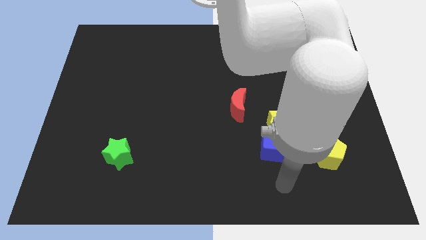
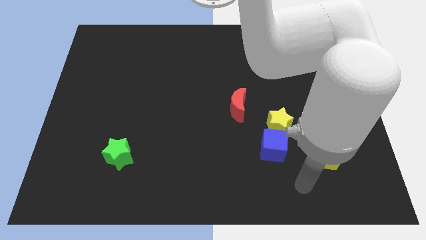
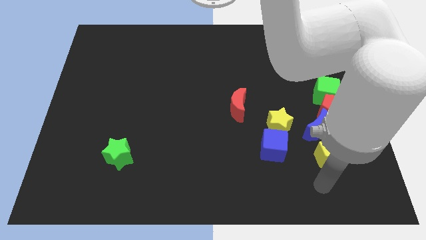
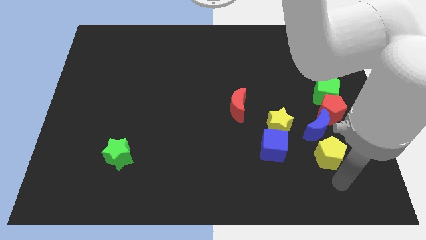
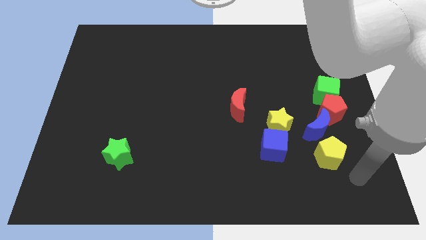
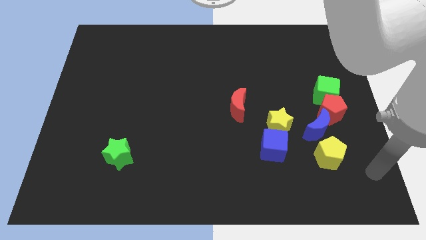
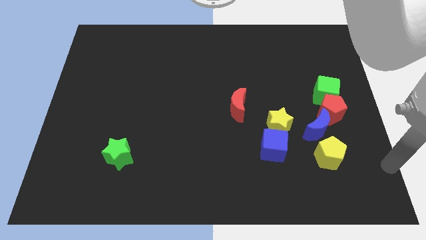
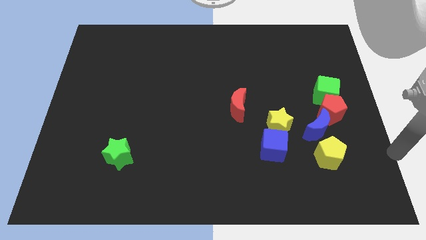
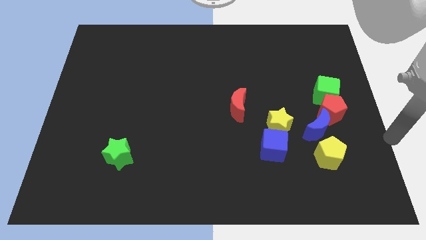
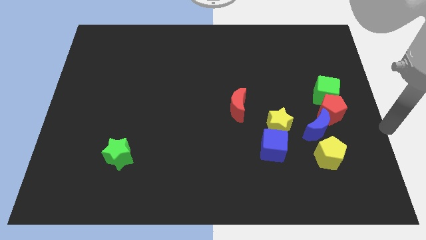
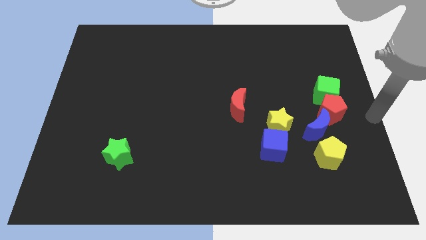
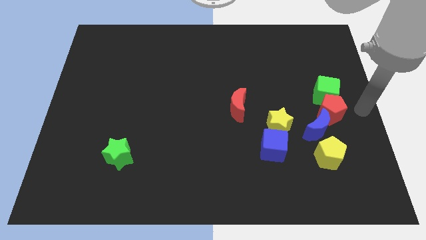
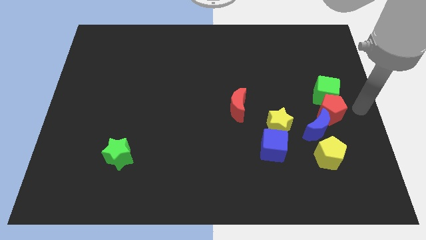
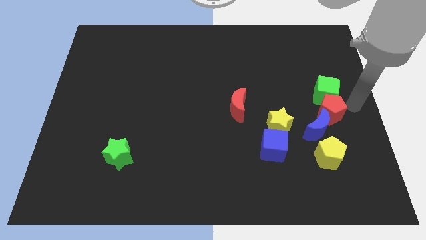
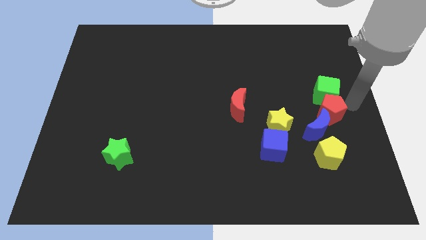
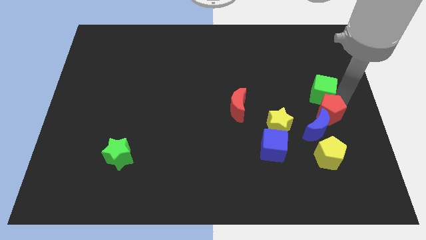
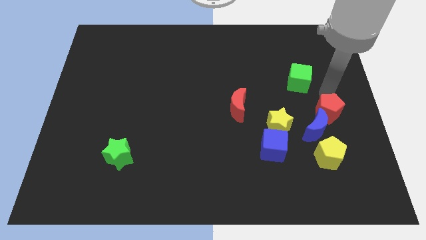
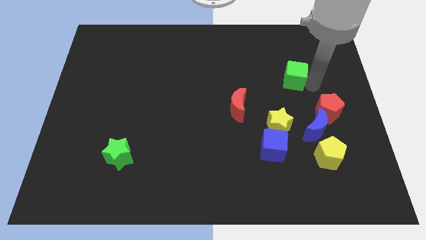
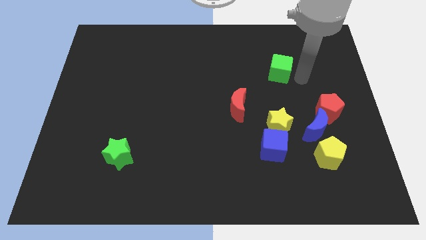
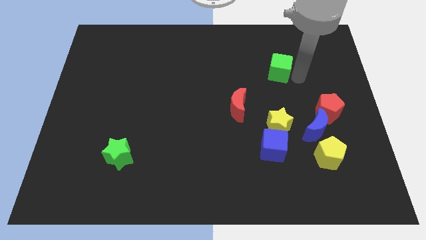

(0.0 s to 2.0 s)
separate the green cube from the red pentagon

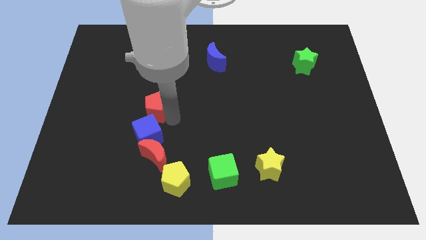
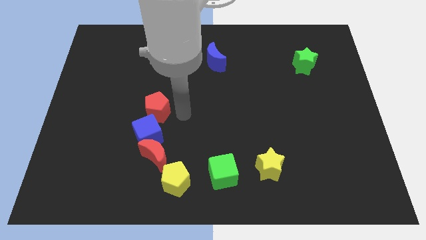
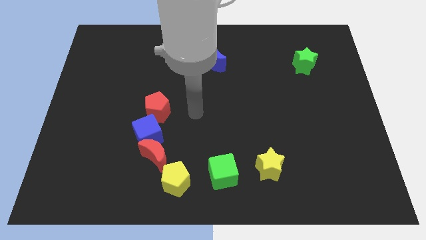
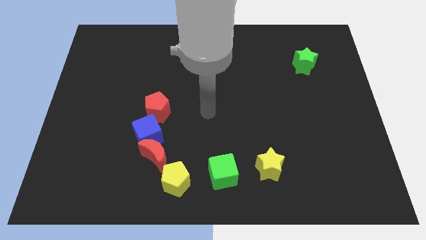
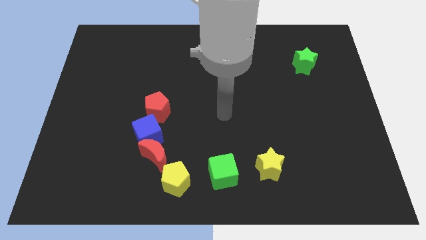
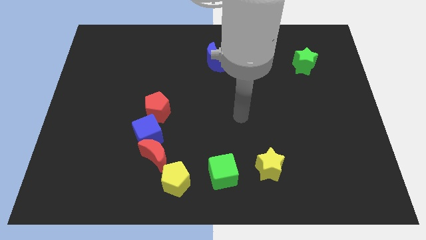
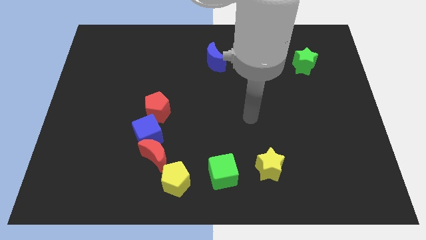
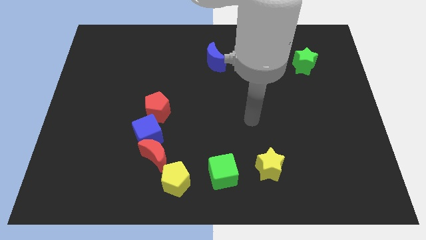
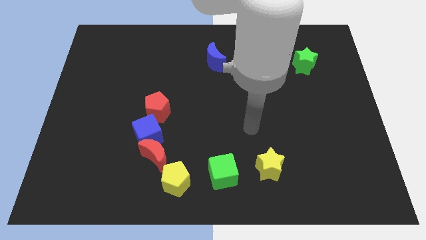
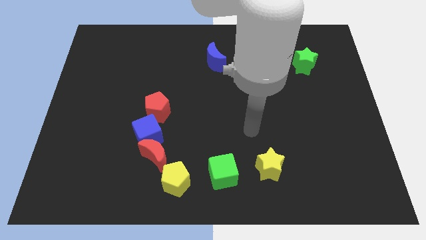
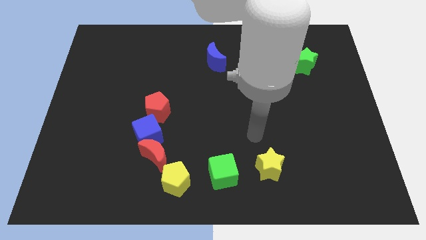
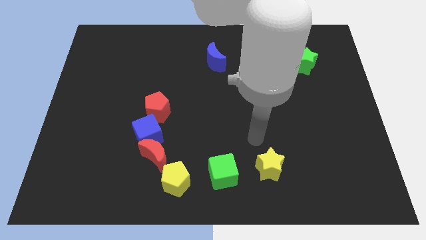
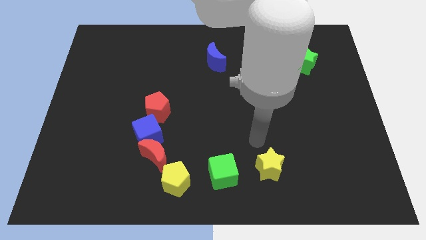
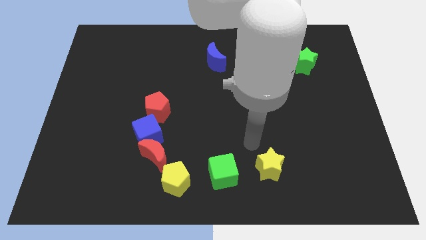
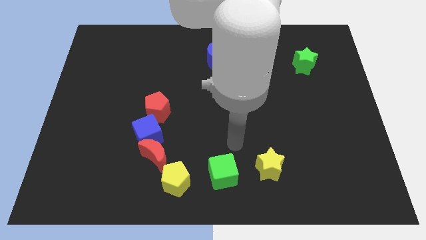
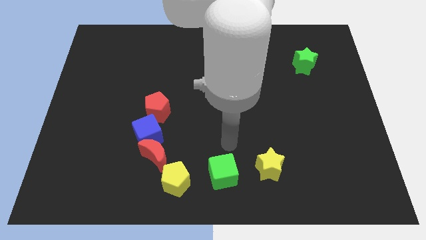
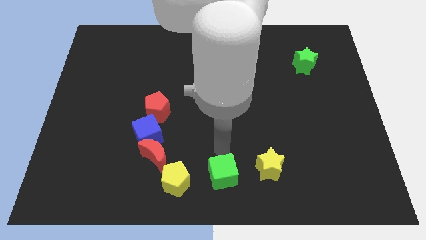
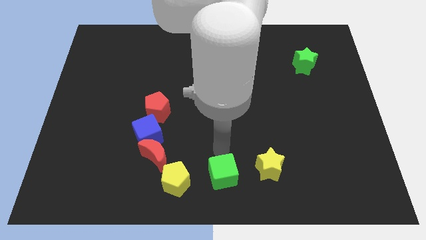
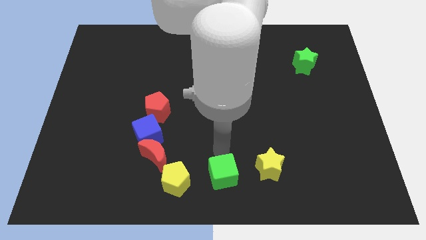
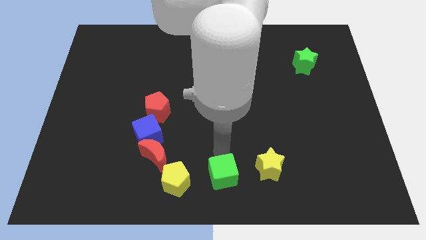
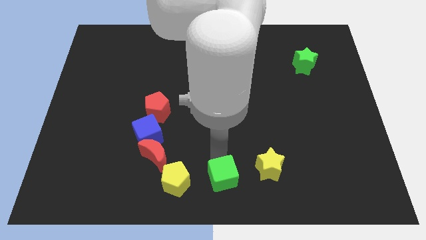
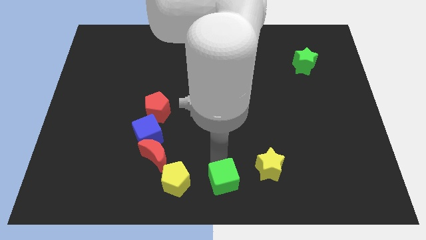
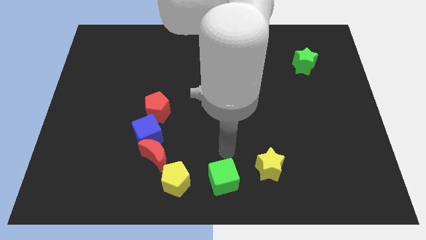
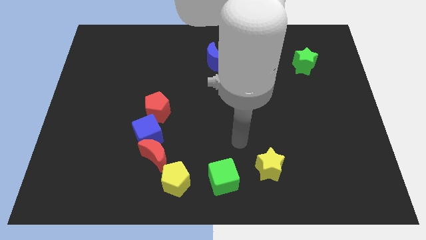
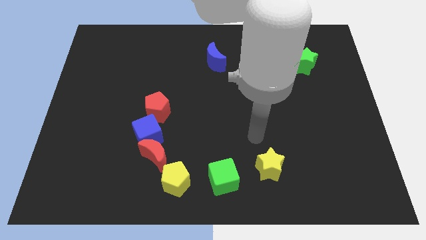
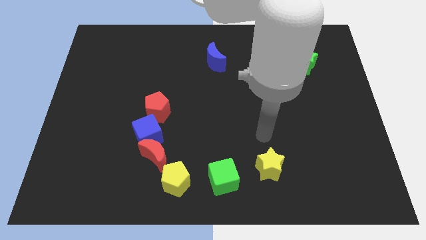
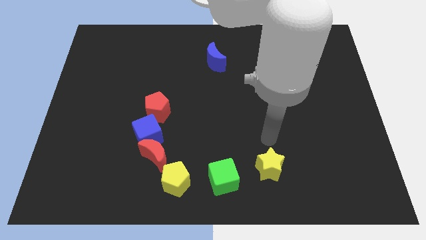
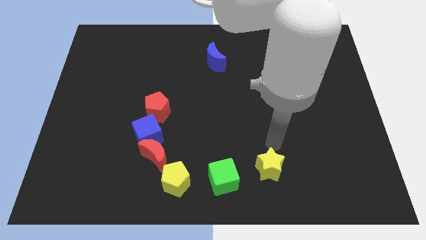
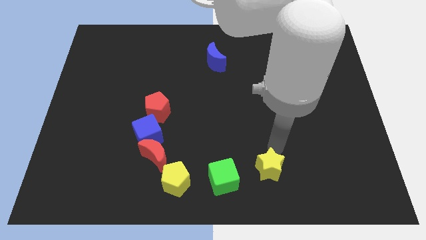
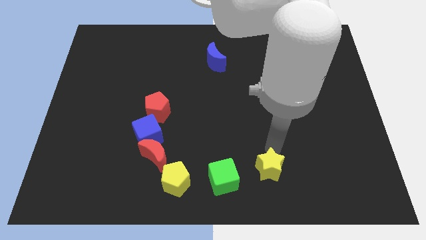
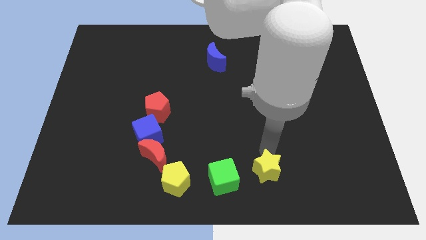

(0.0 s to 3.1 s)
move the green cube slightly downwards

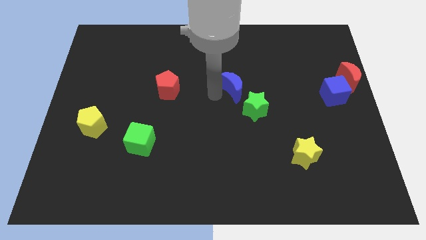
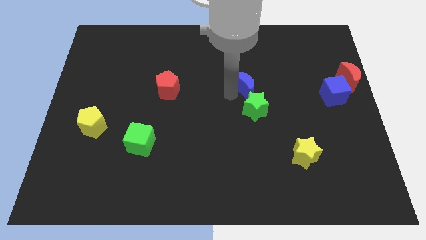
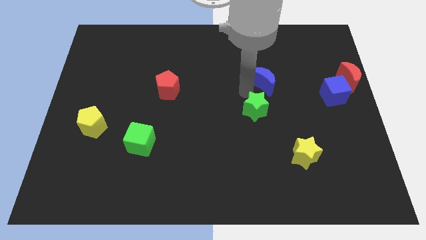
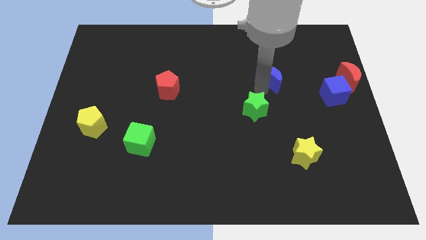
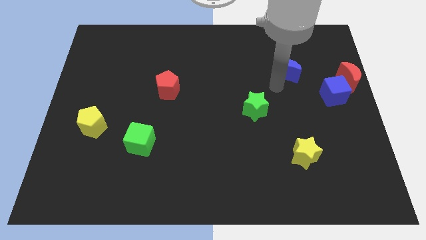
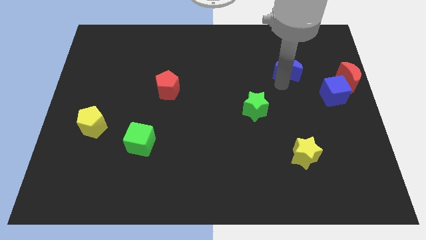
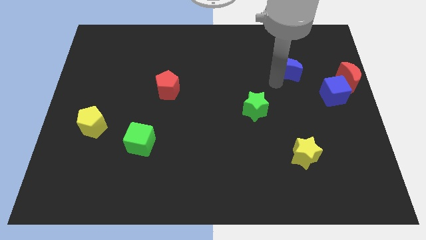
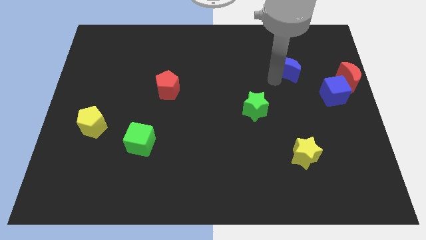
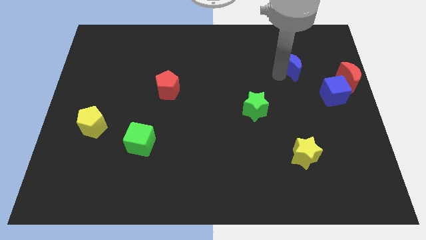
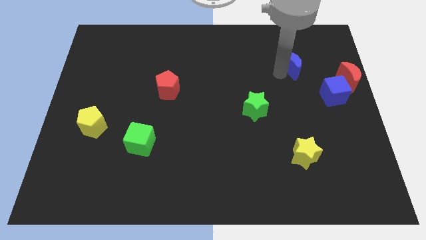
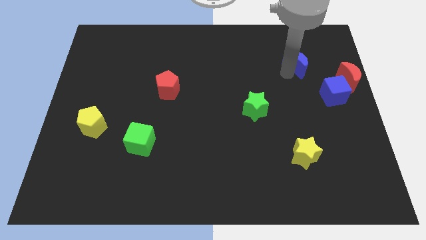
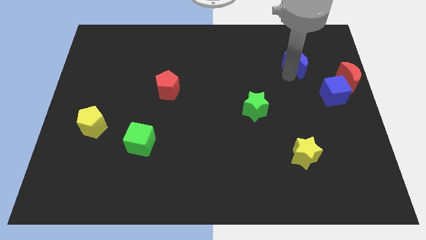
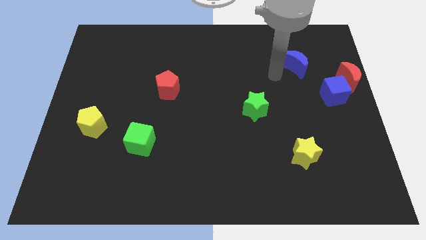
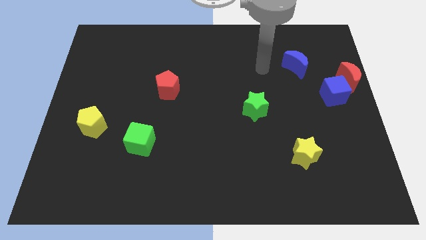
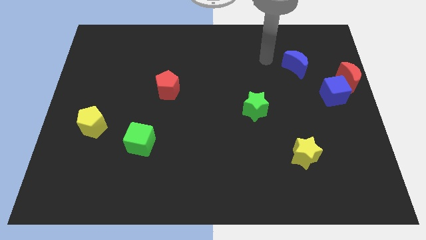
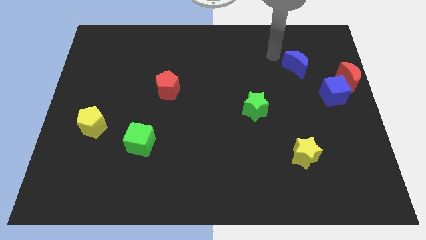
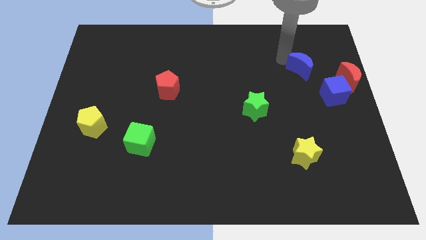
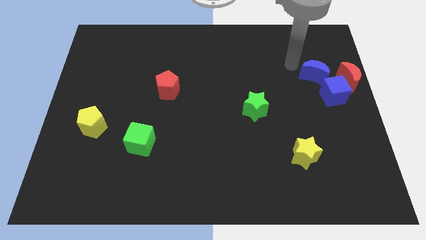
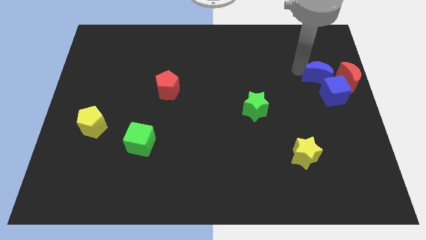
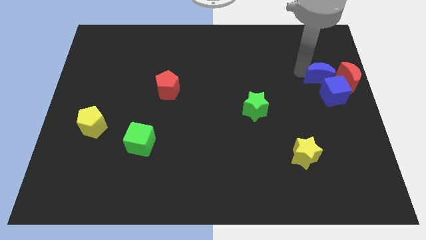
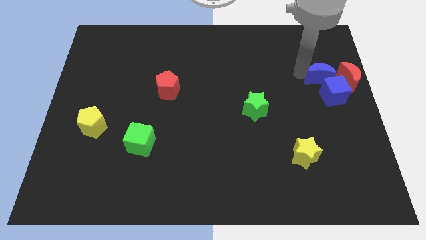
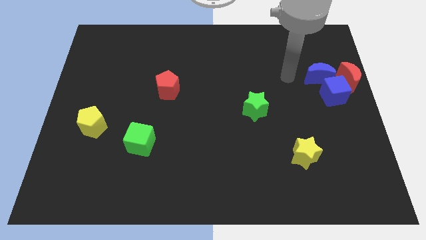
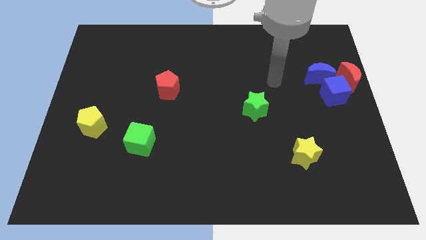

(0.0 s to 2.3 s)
push the blue crescent to the top of the blue cube

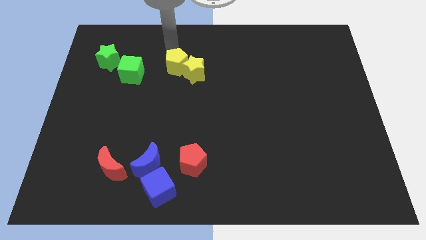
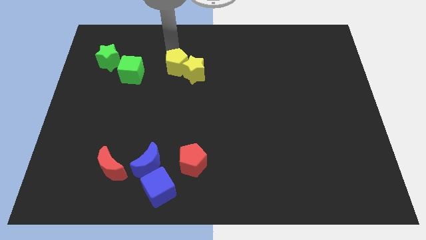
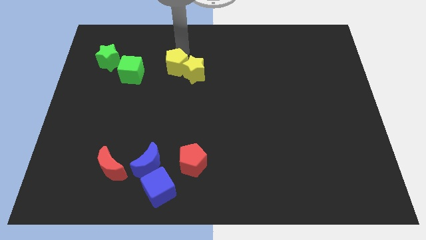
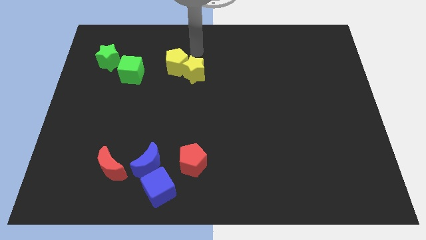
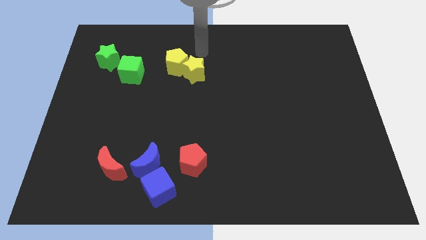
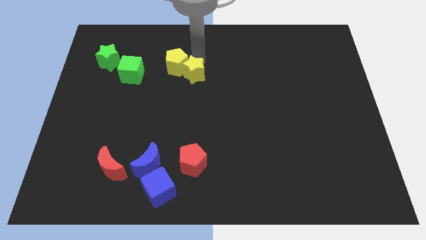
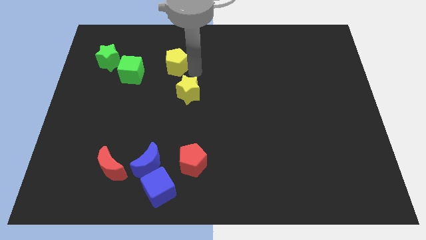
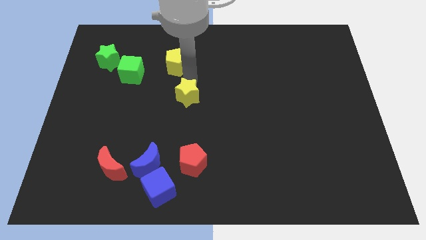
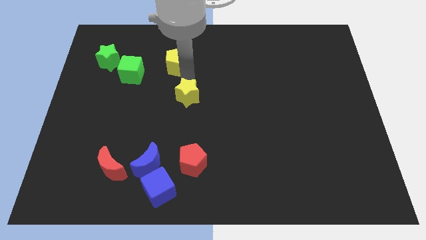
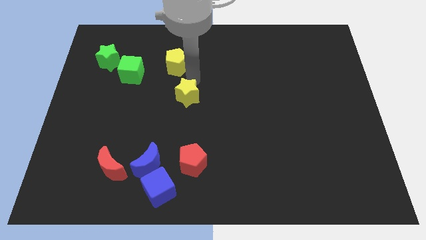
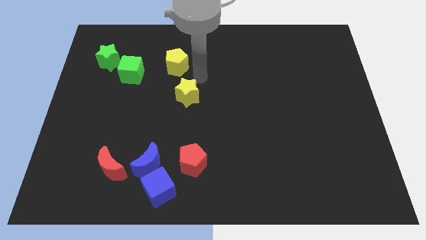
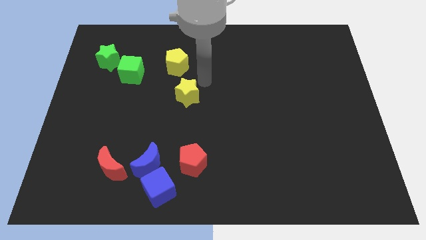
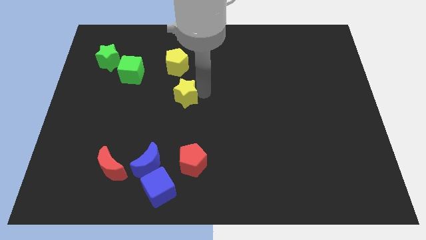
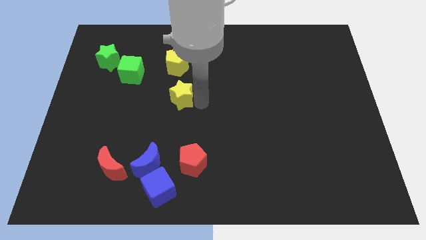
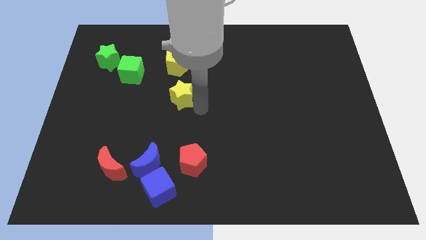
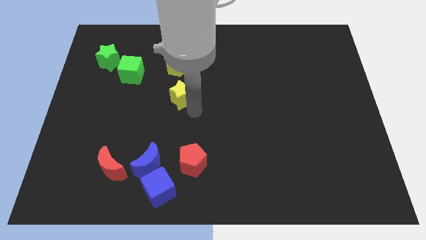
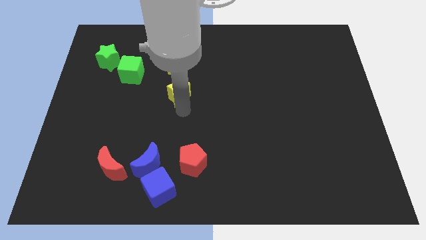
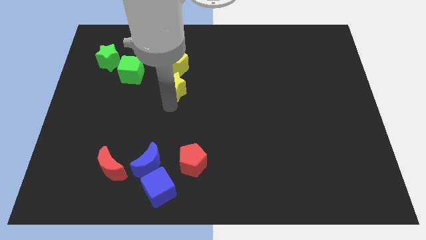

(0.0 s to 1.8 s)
push the yellow star to the bottom of the yellow pentagon
